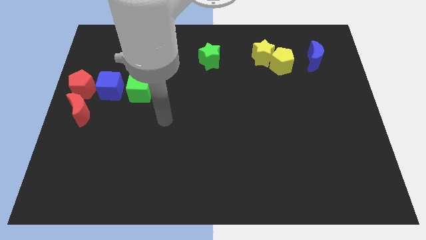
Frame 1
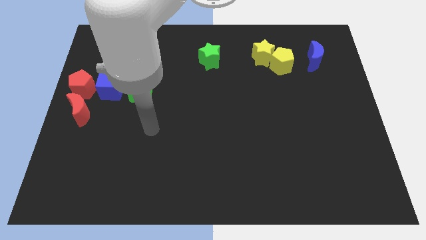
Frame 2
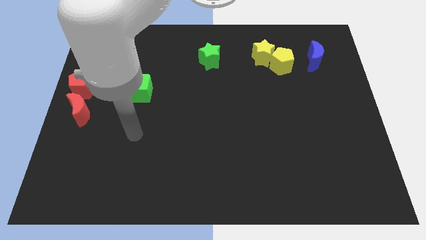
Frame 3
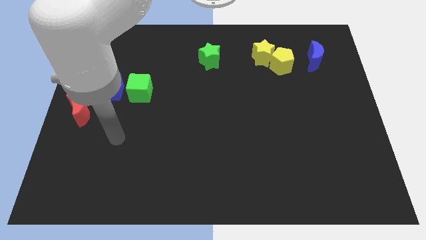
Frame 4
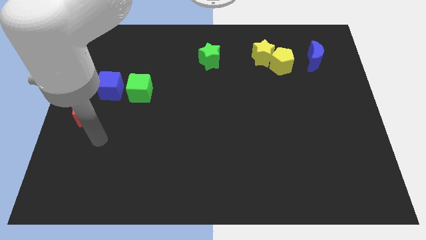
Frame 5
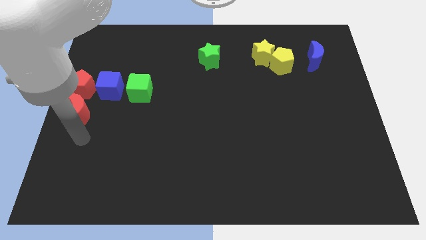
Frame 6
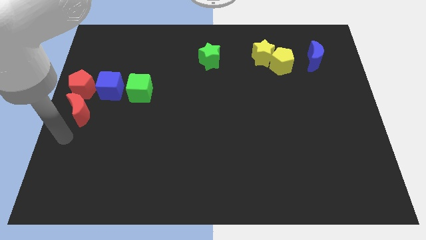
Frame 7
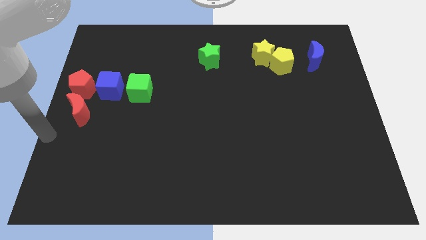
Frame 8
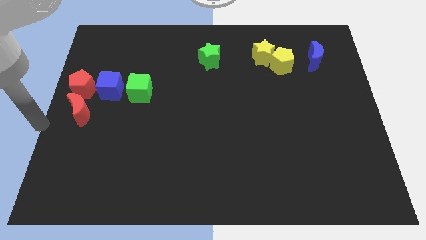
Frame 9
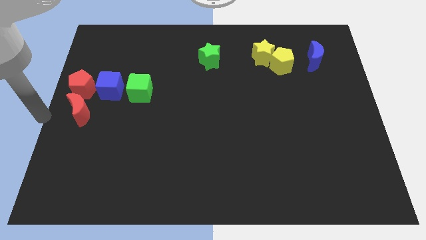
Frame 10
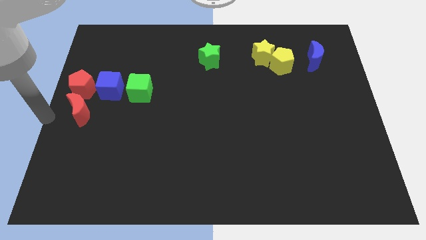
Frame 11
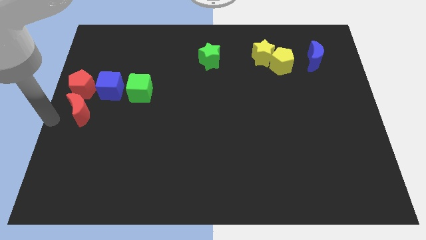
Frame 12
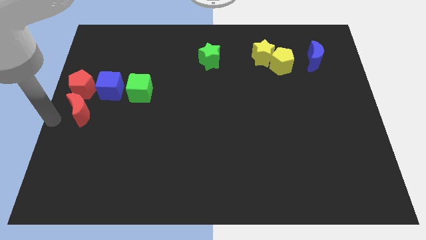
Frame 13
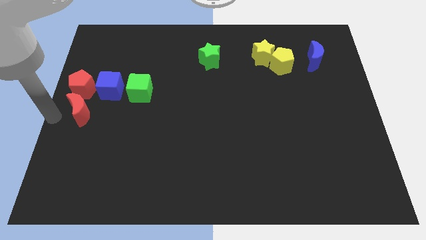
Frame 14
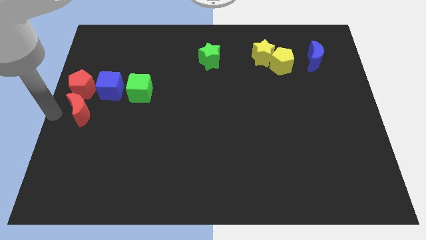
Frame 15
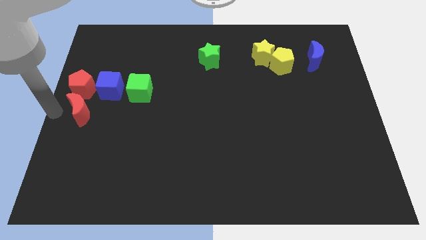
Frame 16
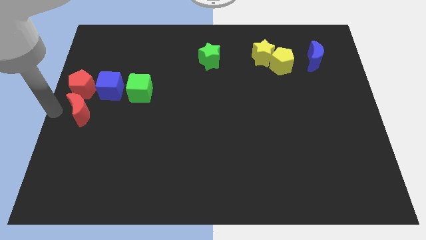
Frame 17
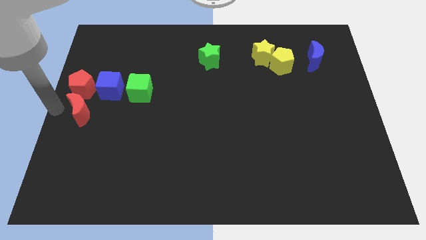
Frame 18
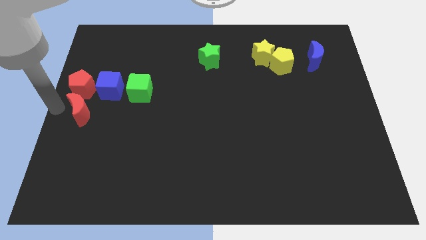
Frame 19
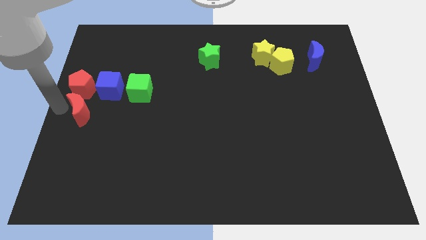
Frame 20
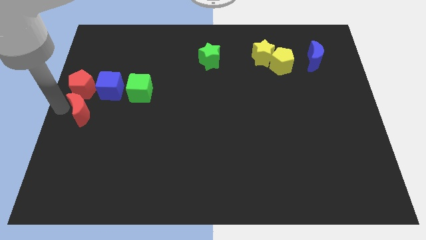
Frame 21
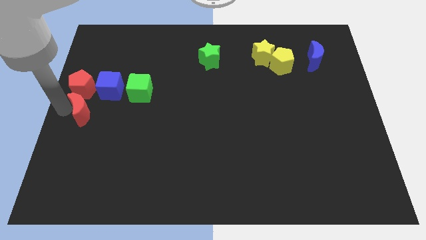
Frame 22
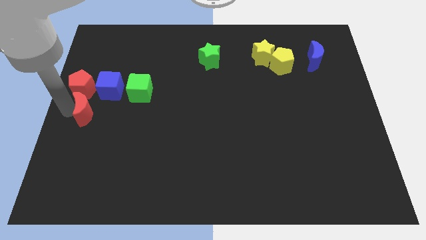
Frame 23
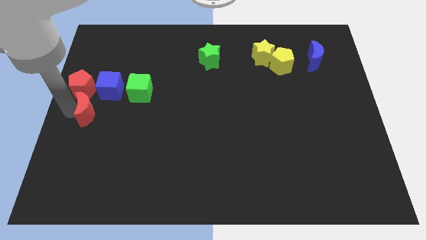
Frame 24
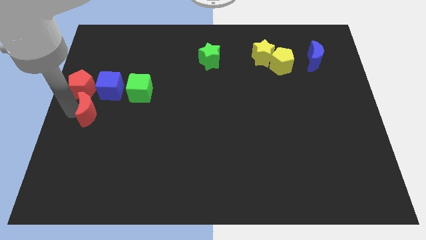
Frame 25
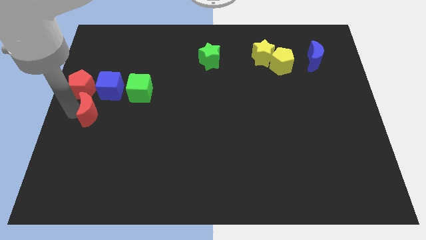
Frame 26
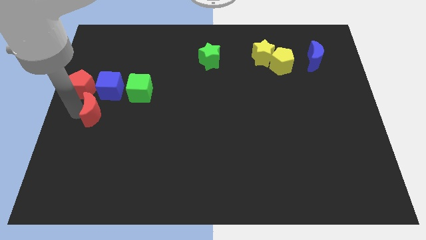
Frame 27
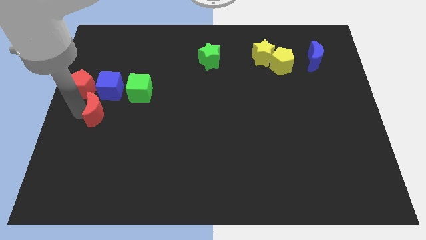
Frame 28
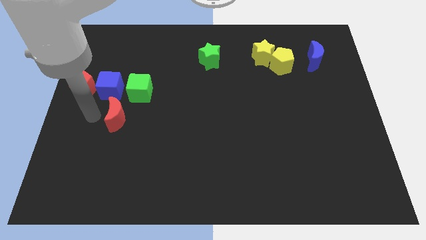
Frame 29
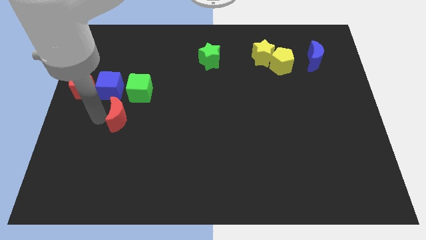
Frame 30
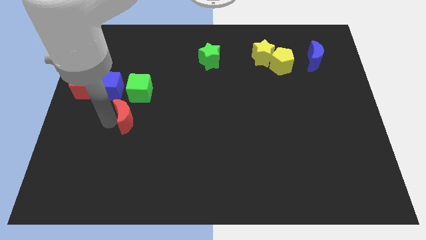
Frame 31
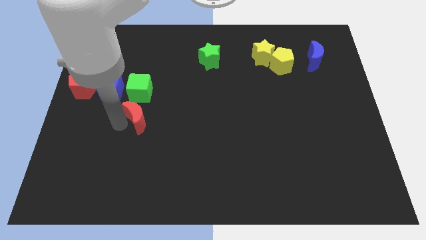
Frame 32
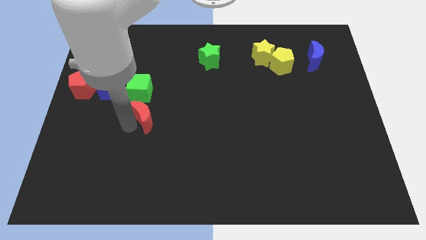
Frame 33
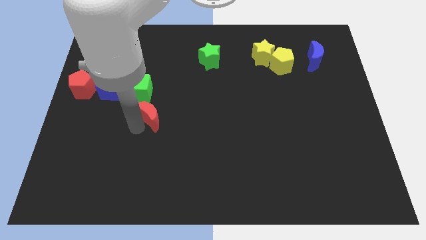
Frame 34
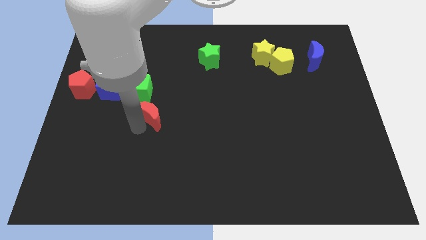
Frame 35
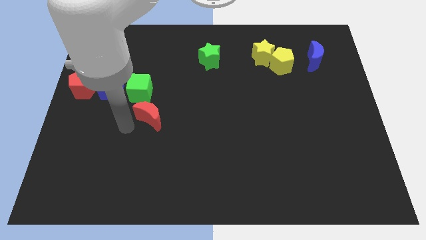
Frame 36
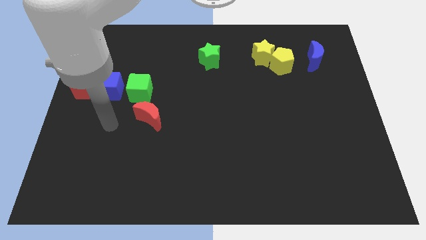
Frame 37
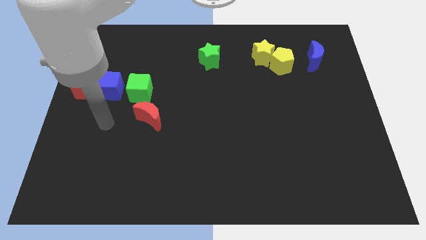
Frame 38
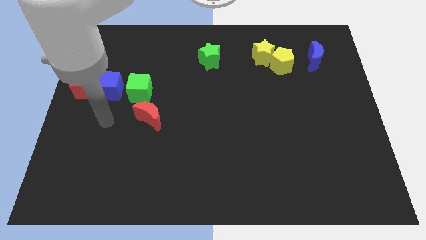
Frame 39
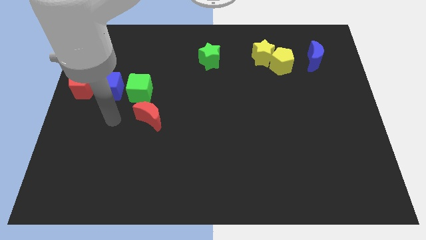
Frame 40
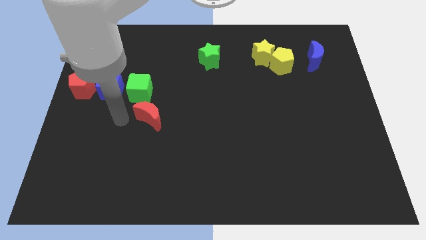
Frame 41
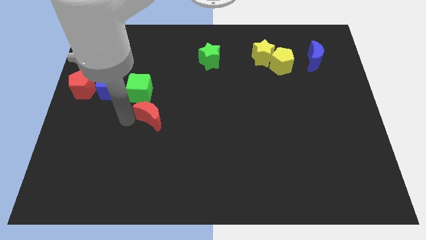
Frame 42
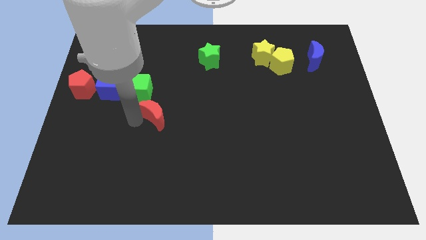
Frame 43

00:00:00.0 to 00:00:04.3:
place the red crescent below the green cube

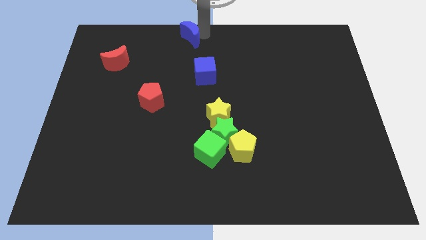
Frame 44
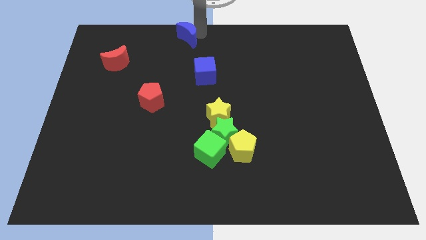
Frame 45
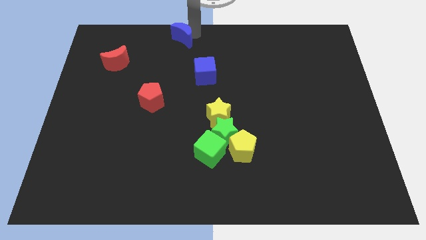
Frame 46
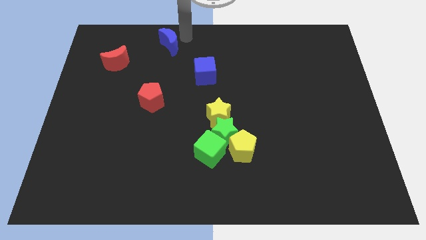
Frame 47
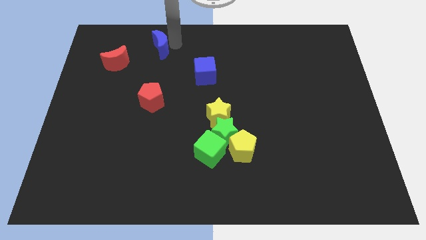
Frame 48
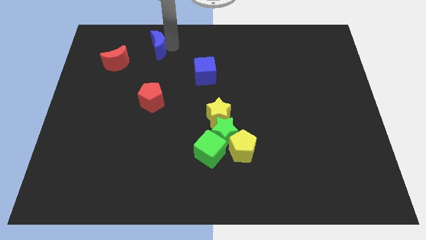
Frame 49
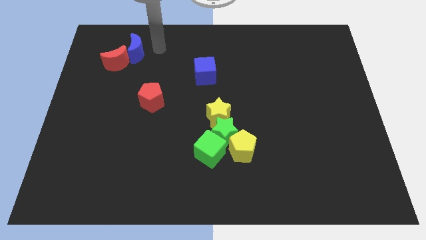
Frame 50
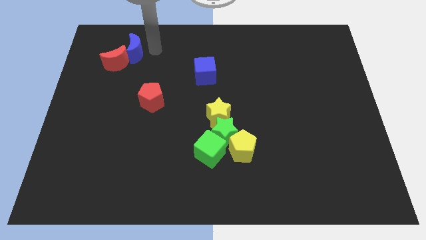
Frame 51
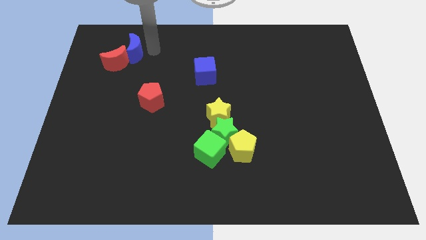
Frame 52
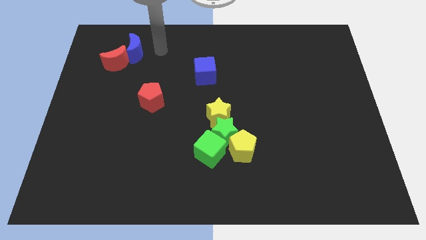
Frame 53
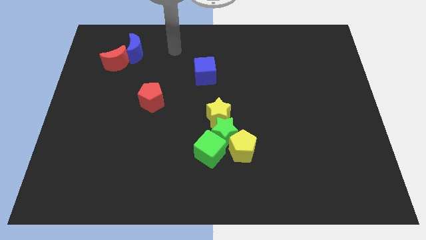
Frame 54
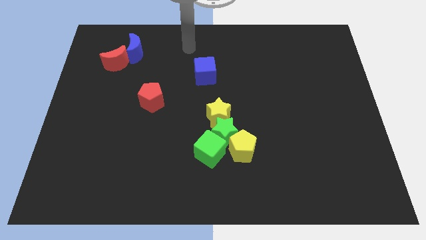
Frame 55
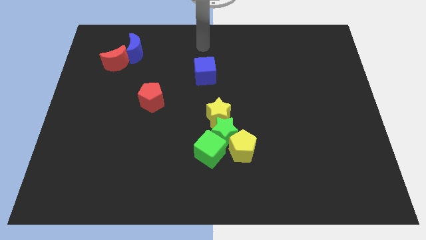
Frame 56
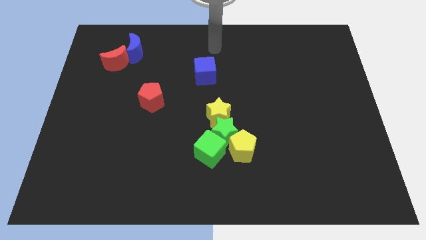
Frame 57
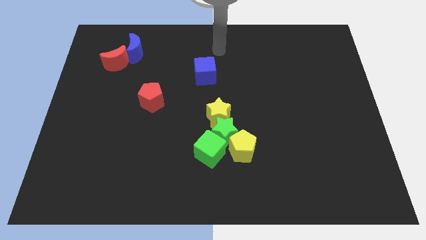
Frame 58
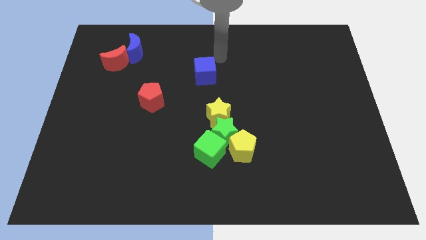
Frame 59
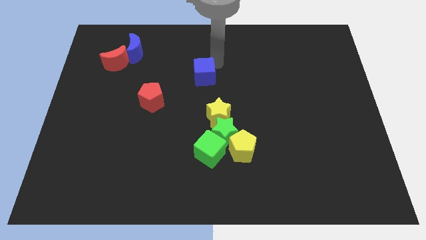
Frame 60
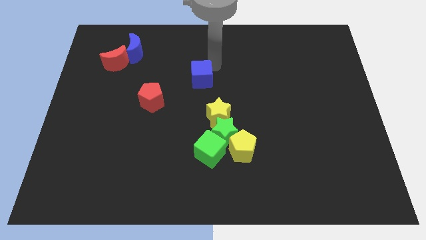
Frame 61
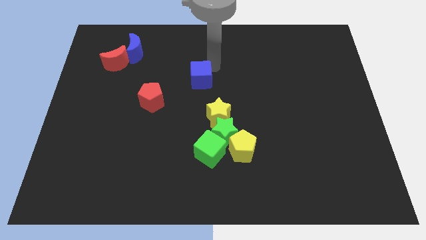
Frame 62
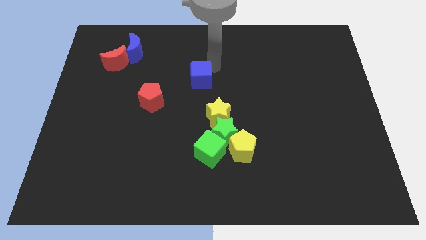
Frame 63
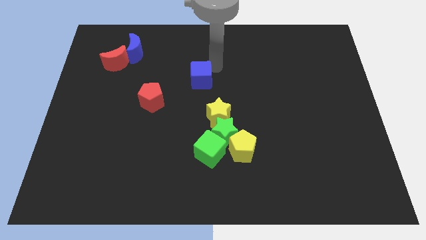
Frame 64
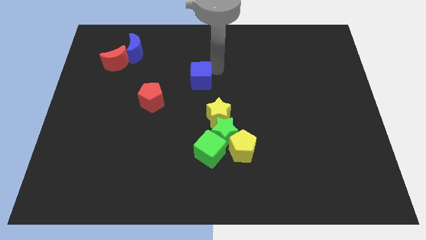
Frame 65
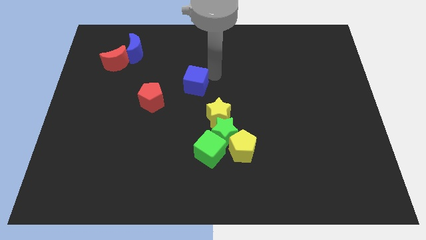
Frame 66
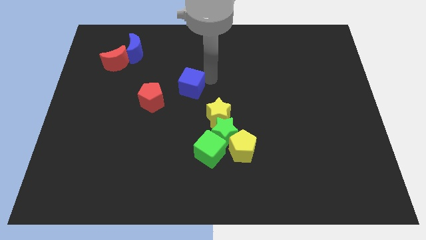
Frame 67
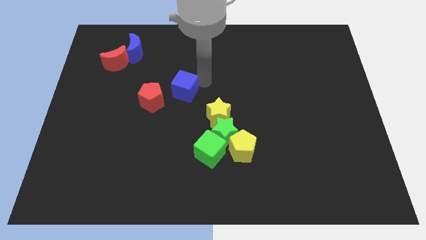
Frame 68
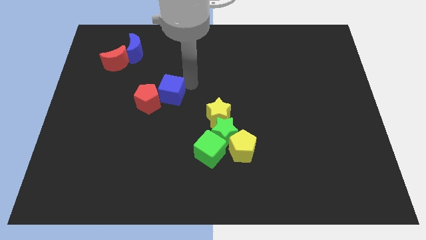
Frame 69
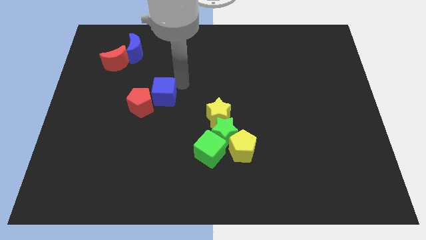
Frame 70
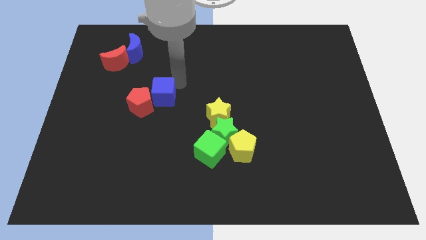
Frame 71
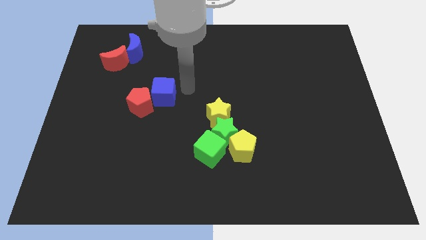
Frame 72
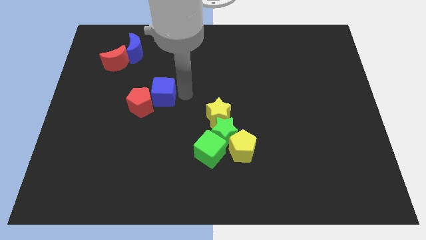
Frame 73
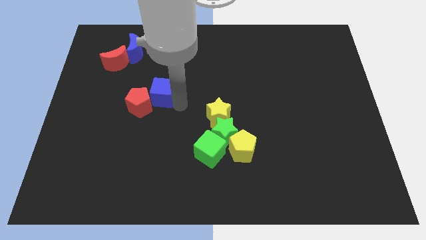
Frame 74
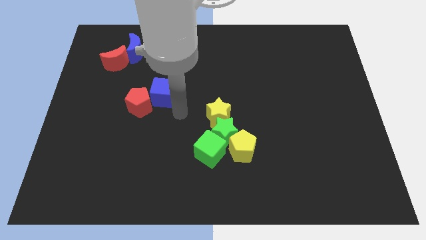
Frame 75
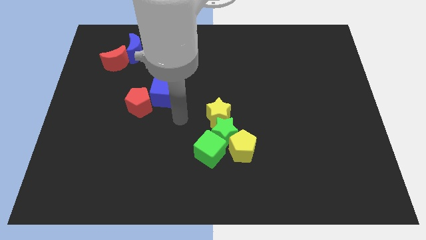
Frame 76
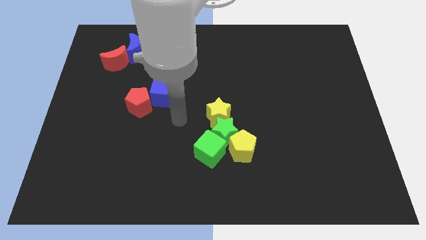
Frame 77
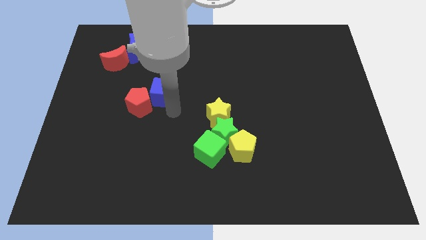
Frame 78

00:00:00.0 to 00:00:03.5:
push the blue moon and blue to the right

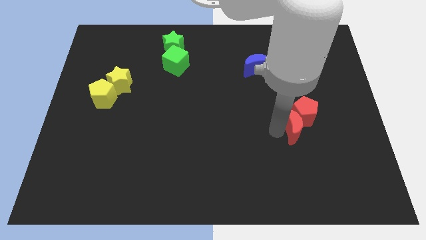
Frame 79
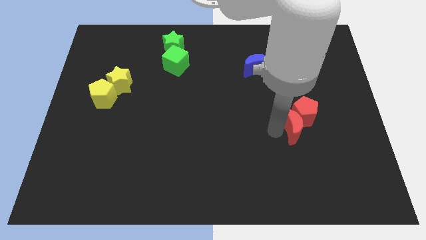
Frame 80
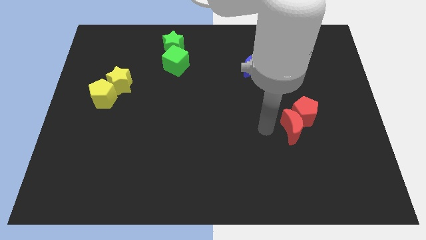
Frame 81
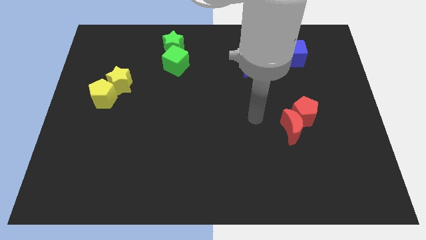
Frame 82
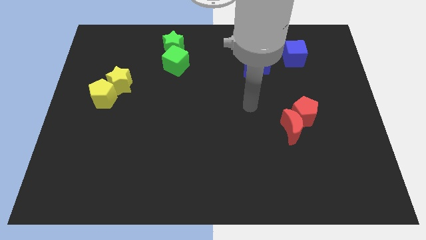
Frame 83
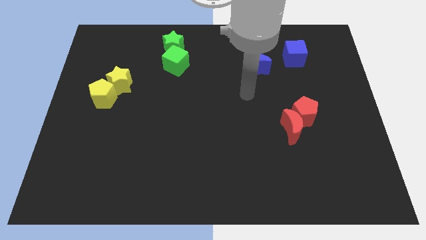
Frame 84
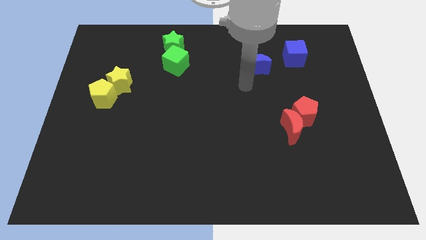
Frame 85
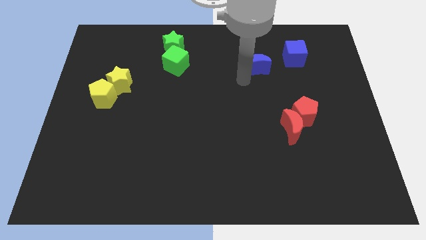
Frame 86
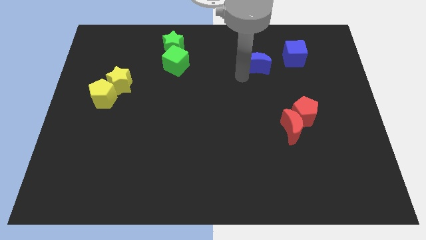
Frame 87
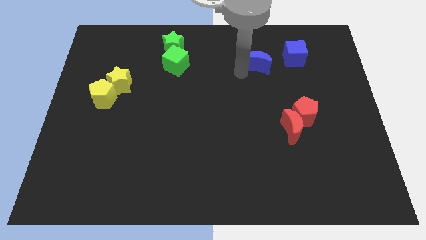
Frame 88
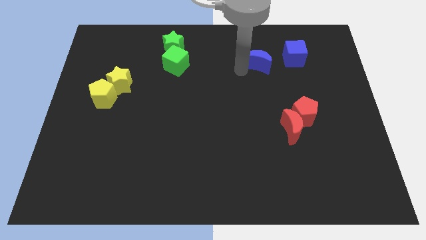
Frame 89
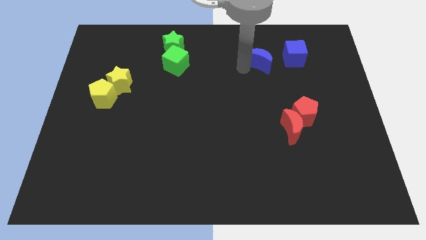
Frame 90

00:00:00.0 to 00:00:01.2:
move the blue crescent to the blue cube
